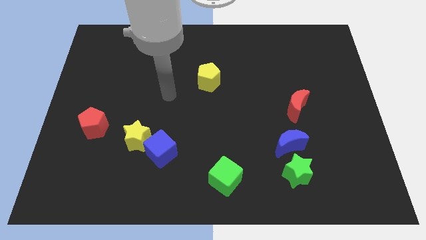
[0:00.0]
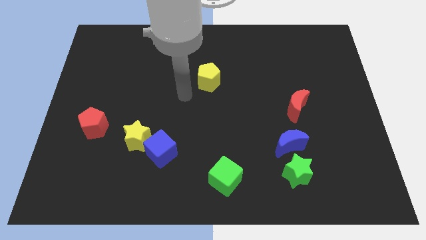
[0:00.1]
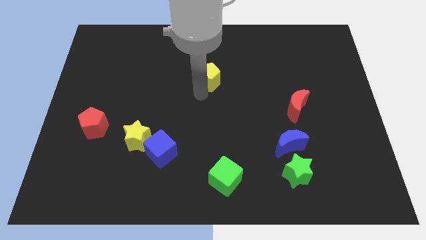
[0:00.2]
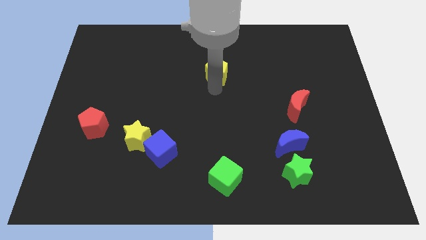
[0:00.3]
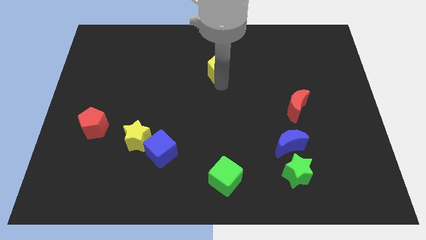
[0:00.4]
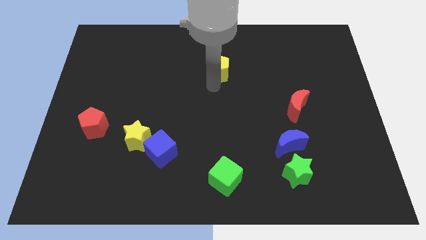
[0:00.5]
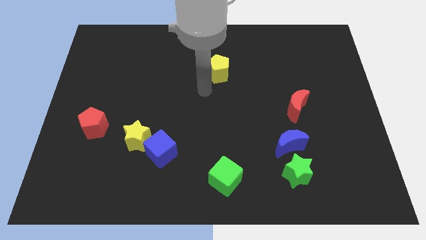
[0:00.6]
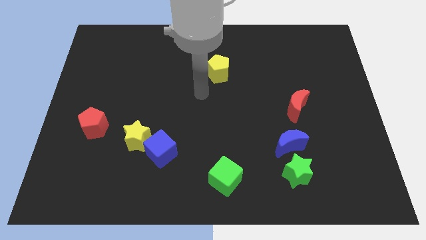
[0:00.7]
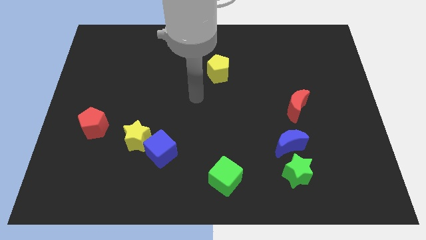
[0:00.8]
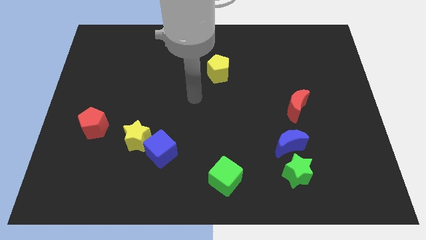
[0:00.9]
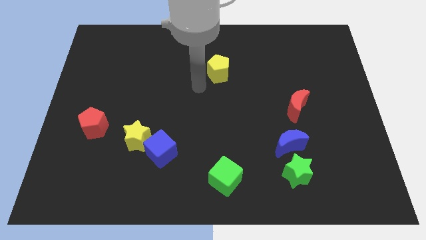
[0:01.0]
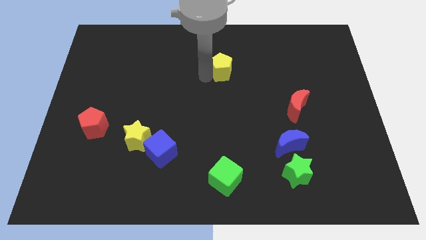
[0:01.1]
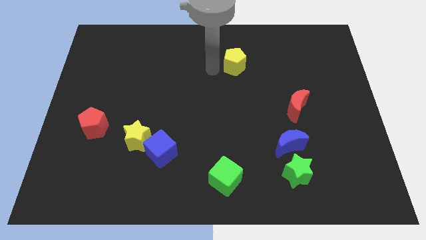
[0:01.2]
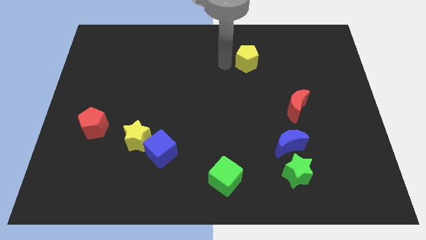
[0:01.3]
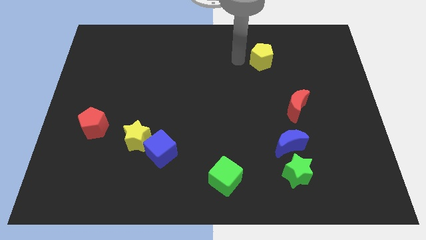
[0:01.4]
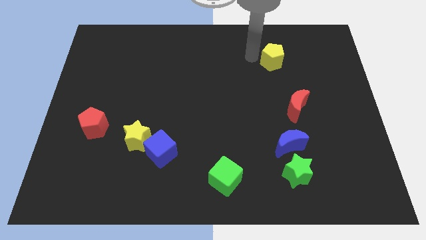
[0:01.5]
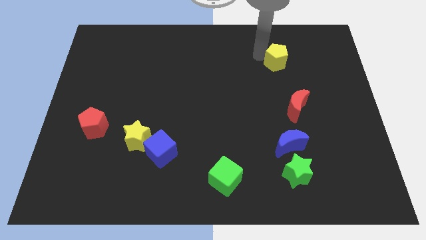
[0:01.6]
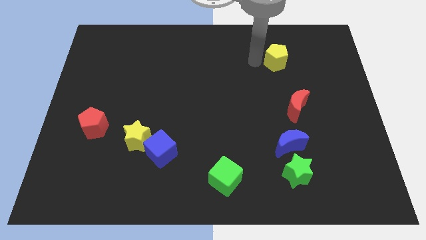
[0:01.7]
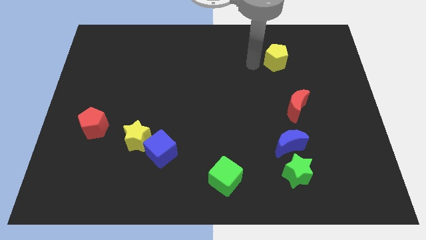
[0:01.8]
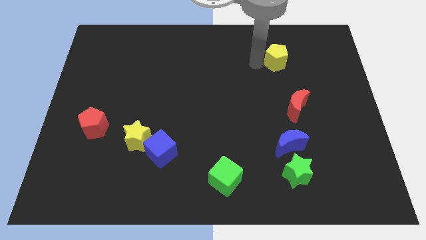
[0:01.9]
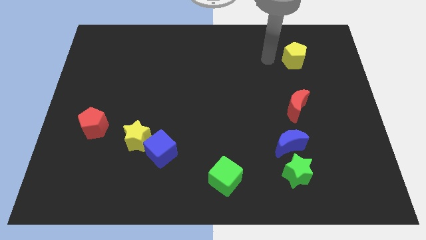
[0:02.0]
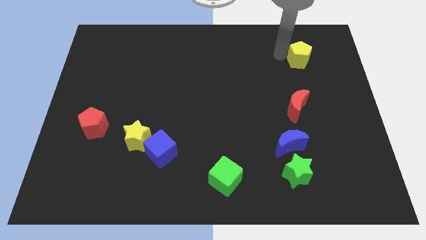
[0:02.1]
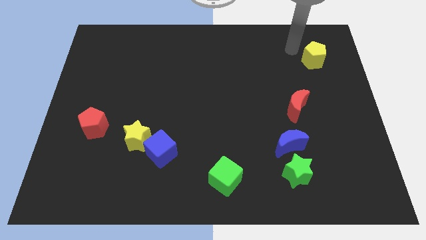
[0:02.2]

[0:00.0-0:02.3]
push yellow pentagon towards right side of the board

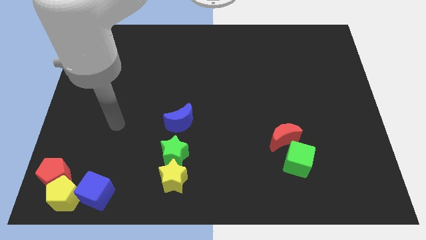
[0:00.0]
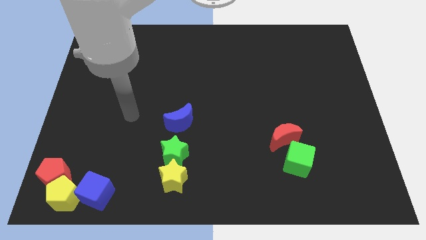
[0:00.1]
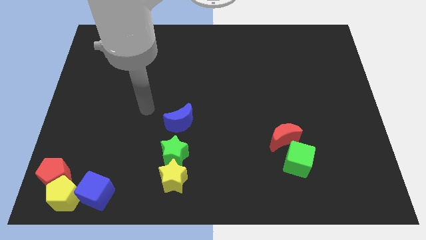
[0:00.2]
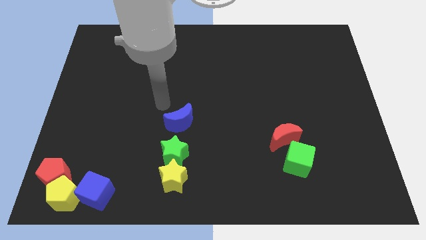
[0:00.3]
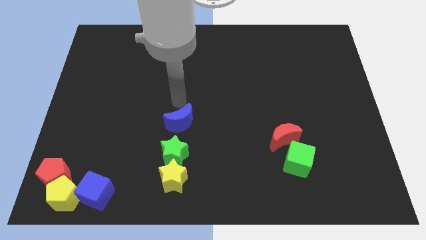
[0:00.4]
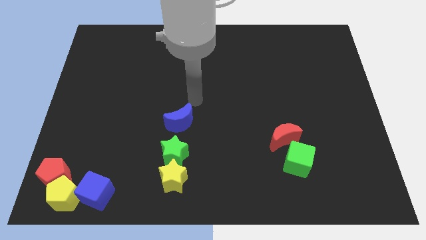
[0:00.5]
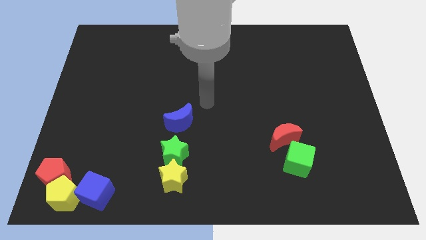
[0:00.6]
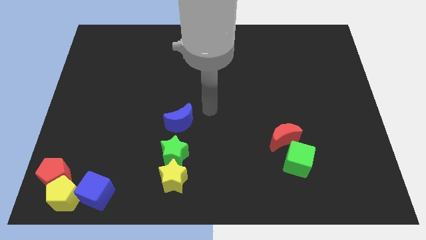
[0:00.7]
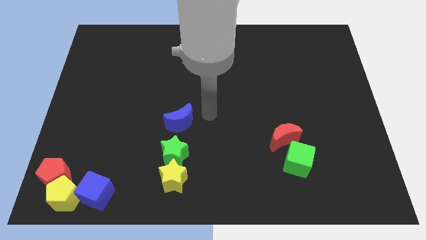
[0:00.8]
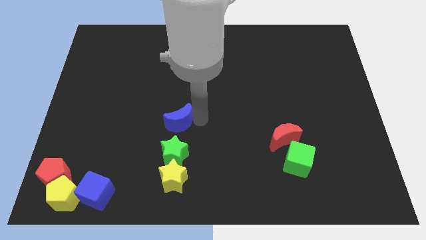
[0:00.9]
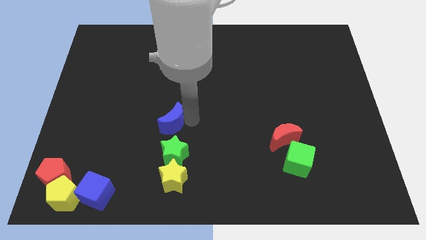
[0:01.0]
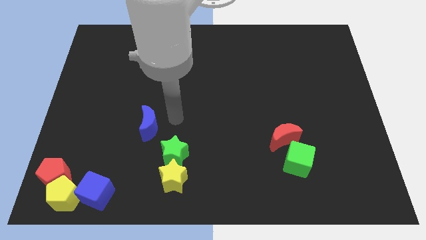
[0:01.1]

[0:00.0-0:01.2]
tap blue crescent on top

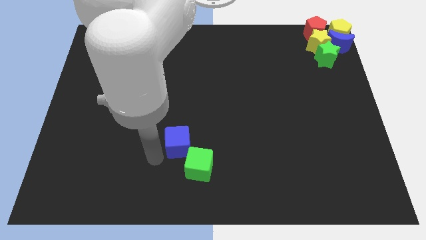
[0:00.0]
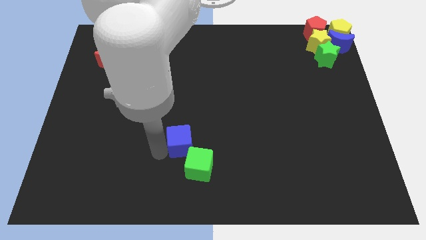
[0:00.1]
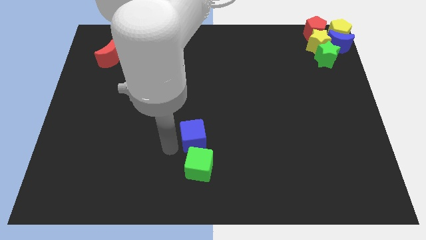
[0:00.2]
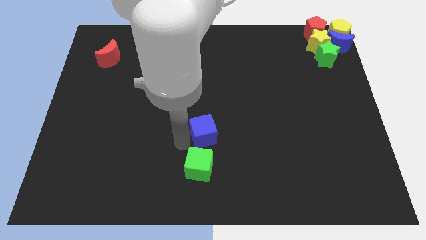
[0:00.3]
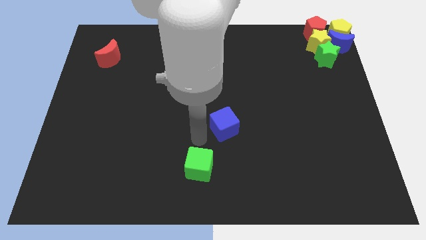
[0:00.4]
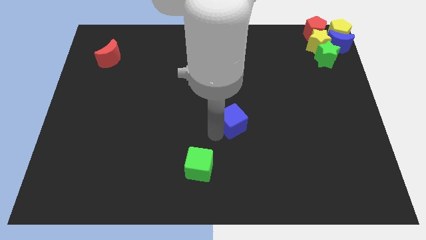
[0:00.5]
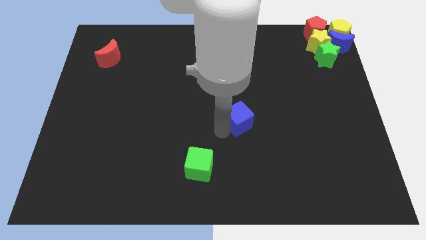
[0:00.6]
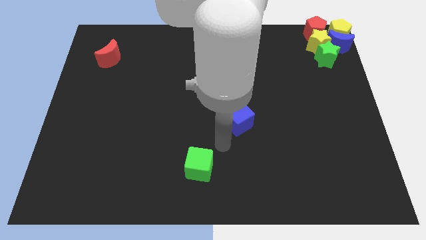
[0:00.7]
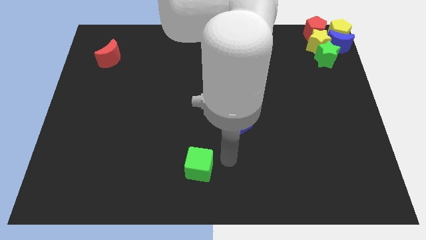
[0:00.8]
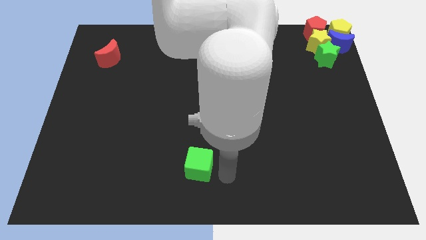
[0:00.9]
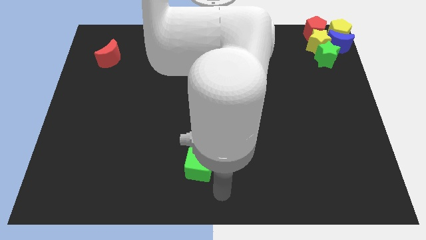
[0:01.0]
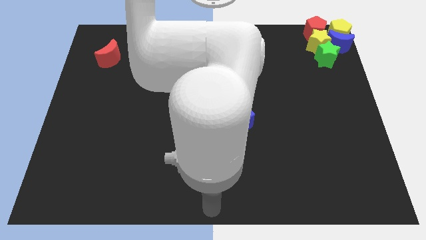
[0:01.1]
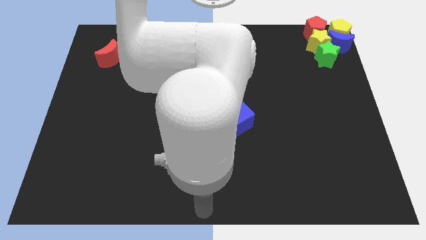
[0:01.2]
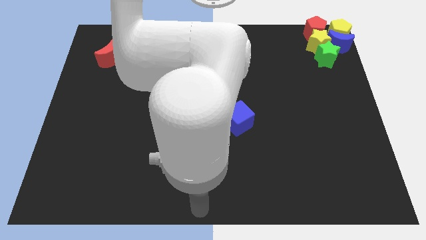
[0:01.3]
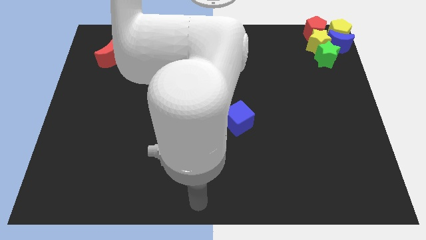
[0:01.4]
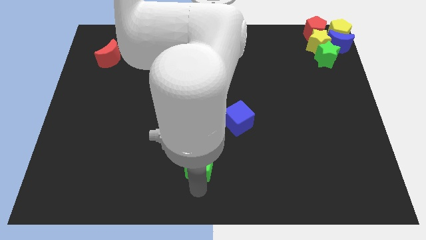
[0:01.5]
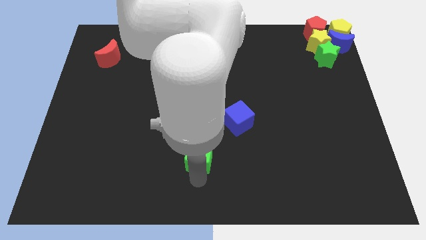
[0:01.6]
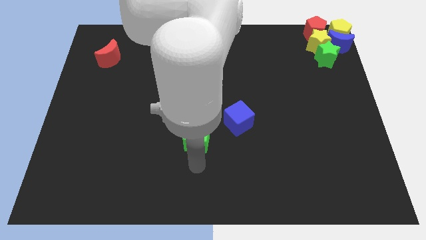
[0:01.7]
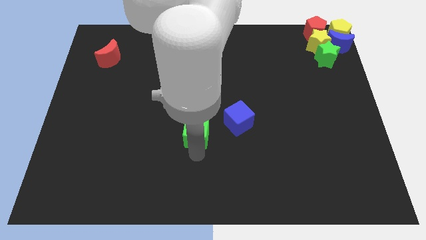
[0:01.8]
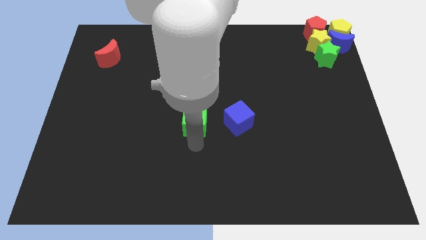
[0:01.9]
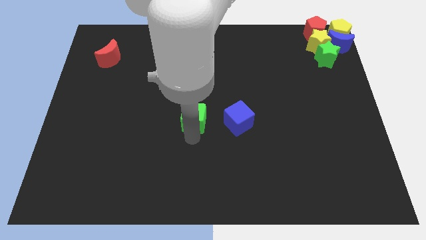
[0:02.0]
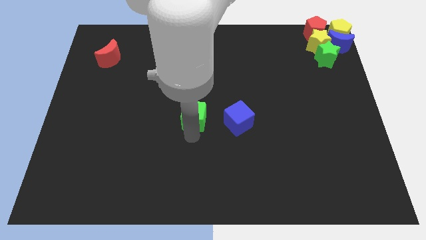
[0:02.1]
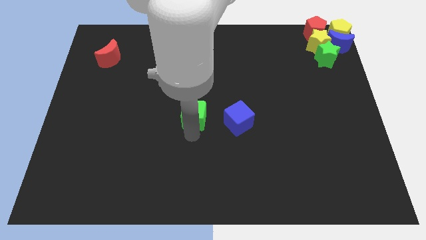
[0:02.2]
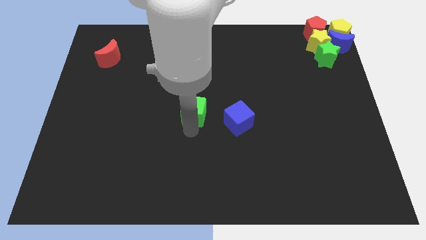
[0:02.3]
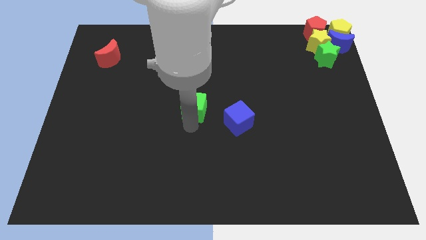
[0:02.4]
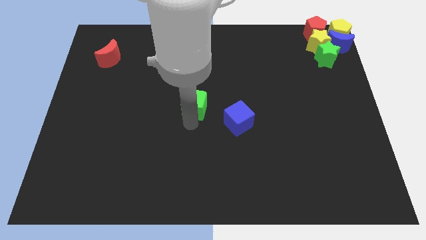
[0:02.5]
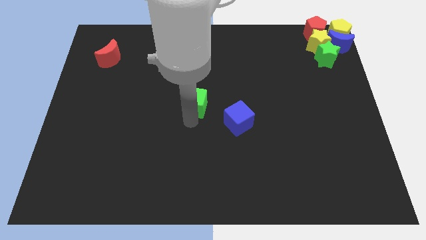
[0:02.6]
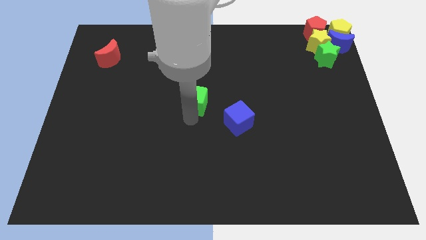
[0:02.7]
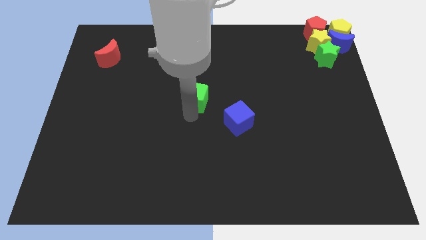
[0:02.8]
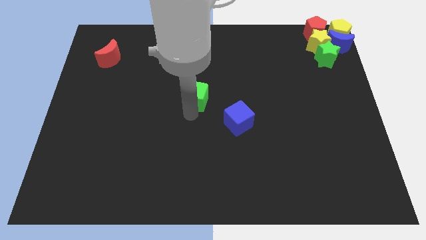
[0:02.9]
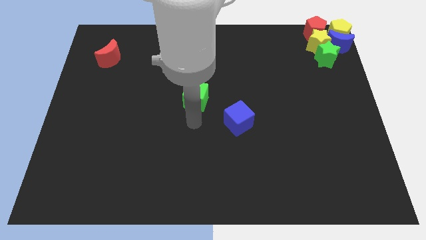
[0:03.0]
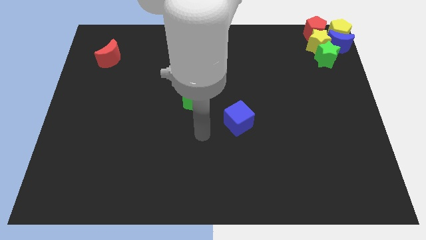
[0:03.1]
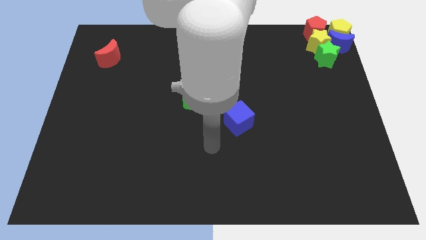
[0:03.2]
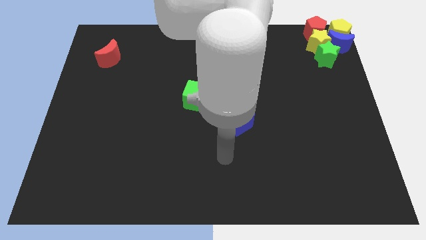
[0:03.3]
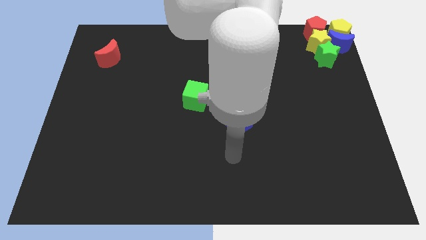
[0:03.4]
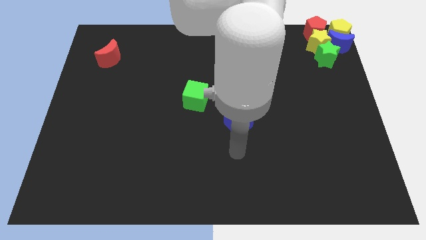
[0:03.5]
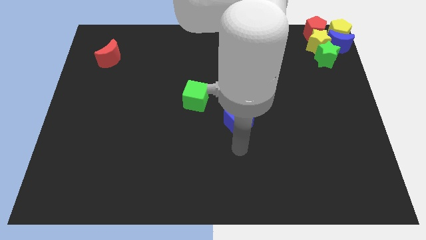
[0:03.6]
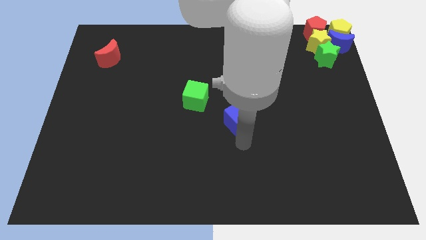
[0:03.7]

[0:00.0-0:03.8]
push the green cube up towards the center of the board

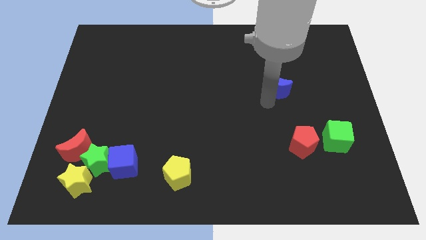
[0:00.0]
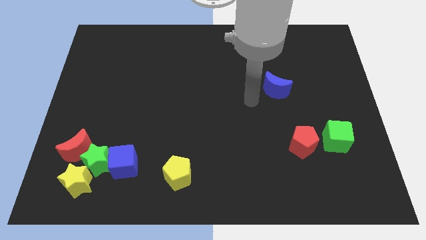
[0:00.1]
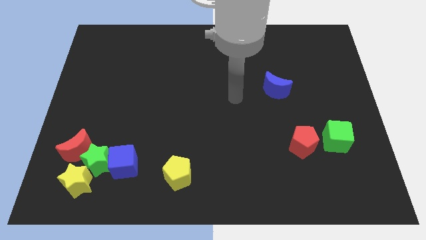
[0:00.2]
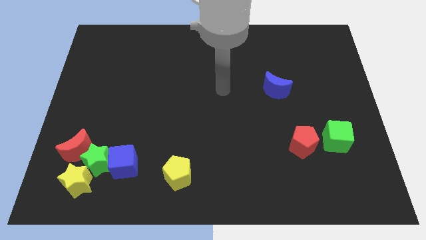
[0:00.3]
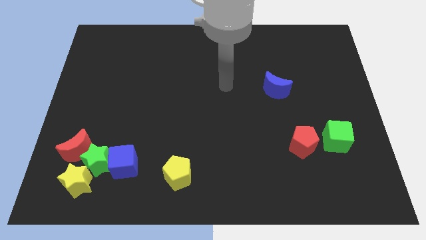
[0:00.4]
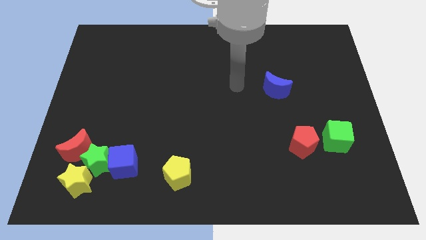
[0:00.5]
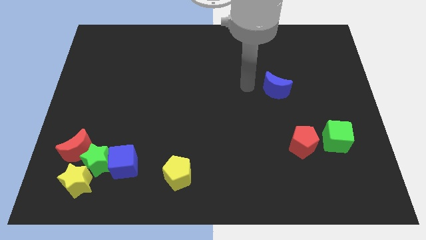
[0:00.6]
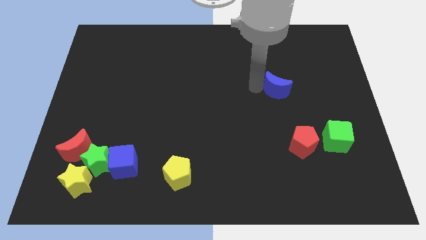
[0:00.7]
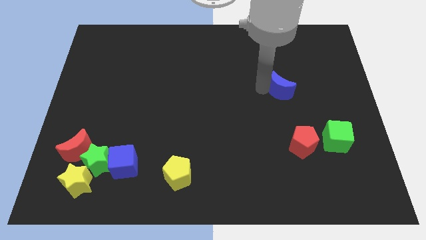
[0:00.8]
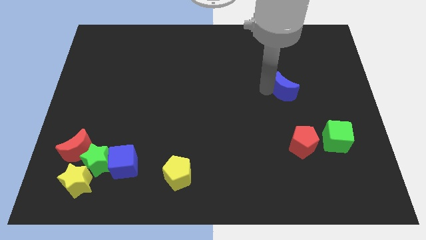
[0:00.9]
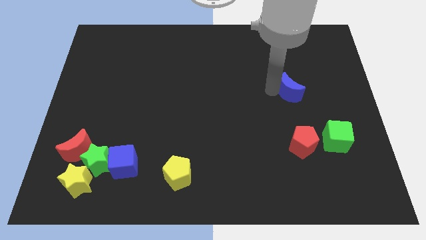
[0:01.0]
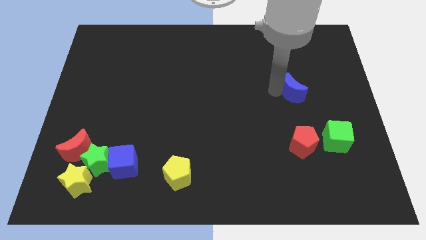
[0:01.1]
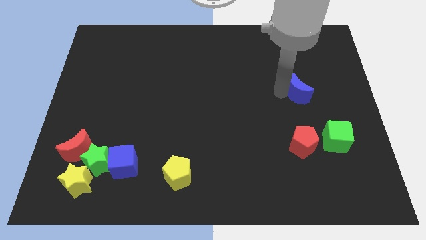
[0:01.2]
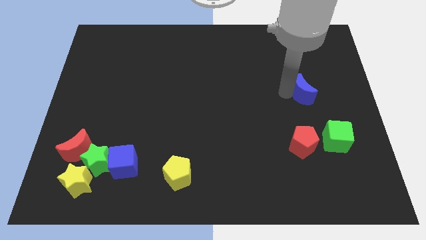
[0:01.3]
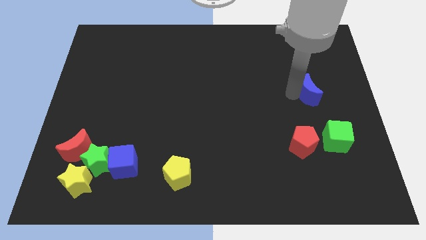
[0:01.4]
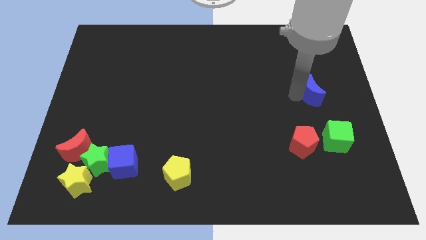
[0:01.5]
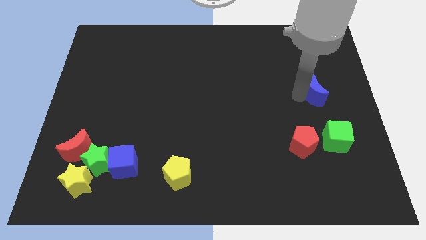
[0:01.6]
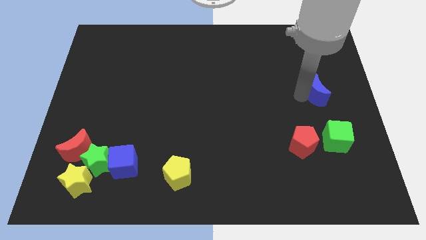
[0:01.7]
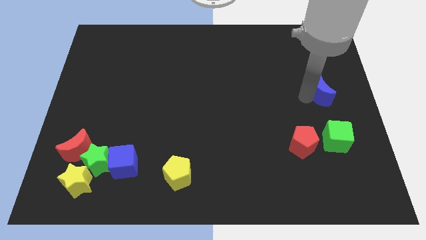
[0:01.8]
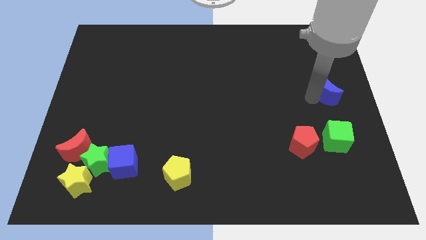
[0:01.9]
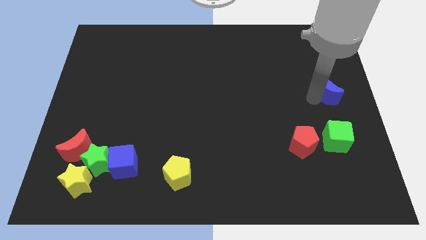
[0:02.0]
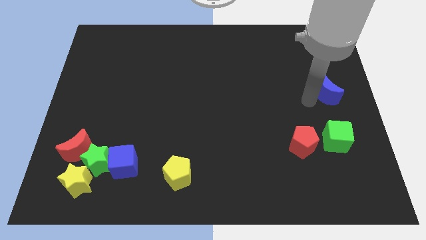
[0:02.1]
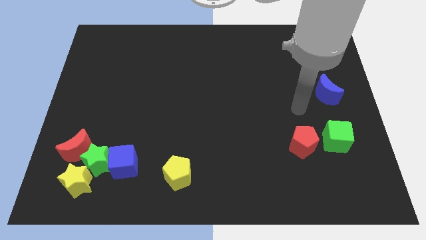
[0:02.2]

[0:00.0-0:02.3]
place the blue moon vertically above the green cube
